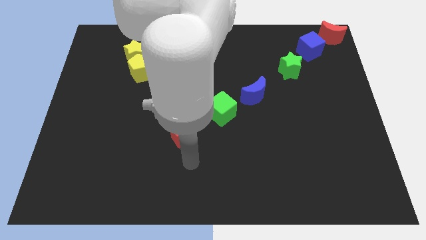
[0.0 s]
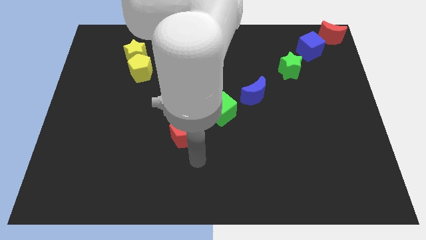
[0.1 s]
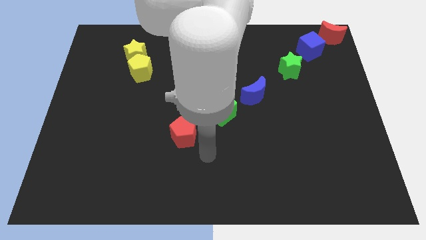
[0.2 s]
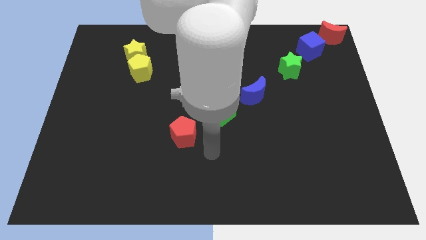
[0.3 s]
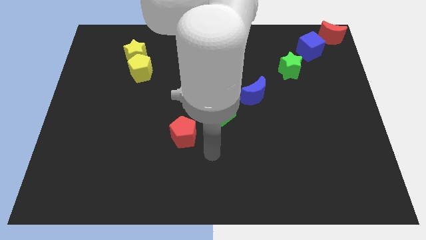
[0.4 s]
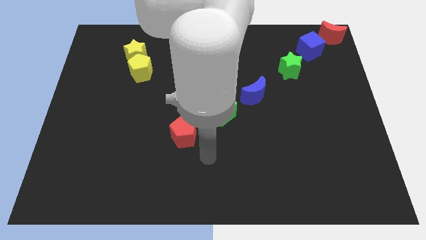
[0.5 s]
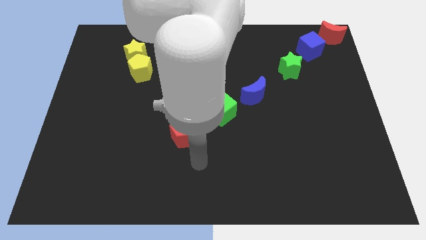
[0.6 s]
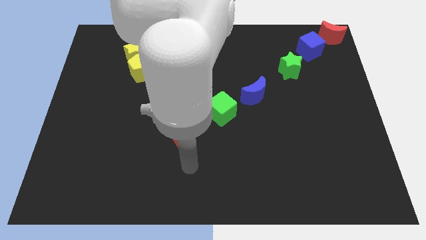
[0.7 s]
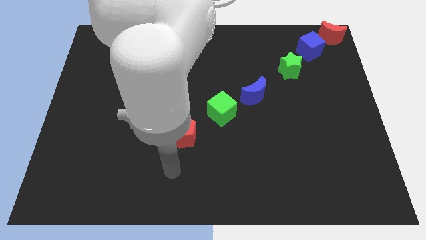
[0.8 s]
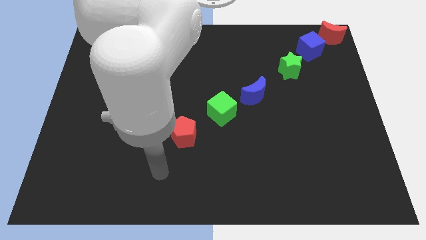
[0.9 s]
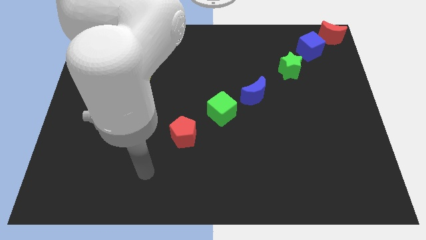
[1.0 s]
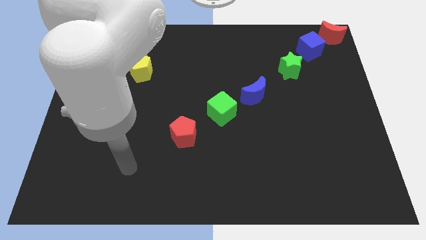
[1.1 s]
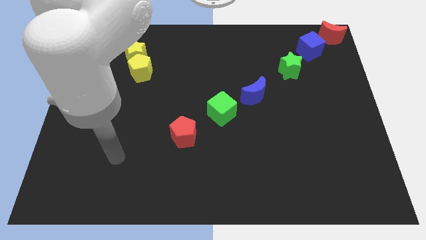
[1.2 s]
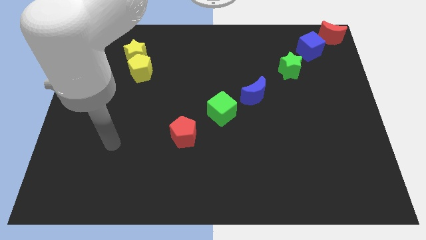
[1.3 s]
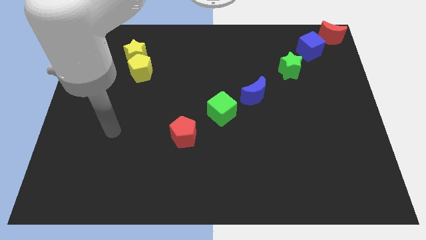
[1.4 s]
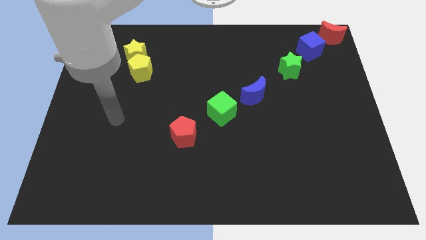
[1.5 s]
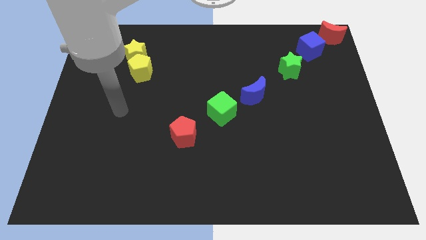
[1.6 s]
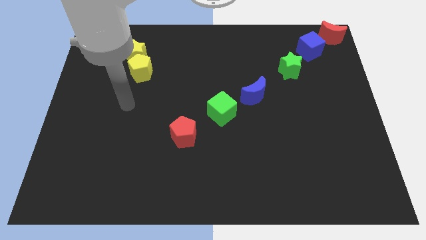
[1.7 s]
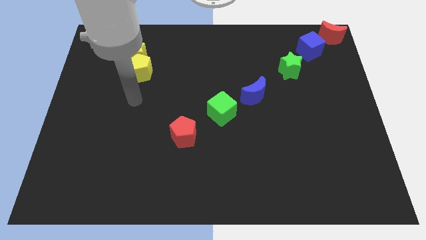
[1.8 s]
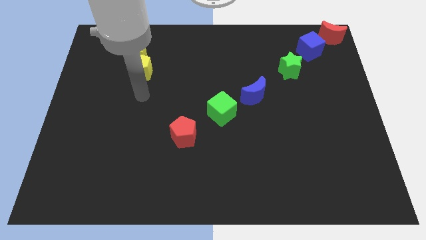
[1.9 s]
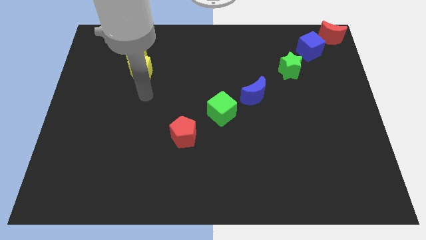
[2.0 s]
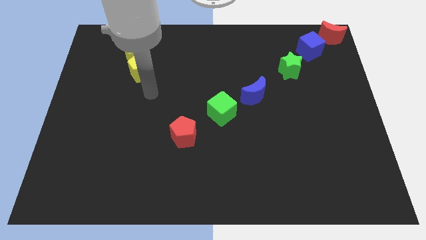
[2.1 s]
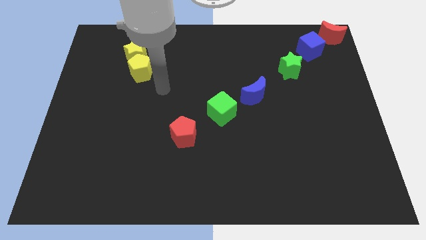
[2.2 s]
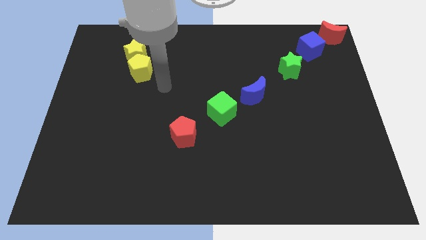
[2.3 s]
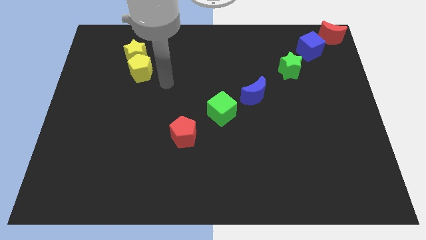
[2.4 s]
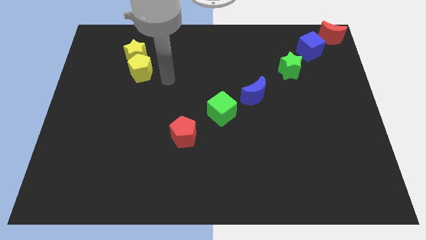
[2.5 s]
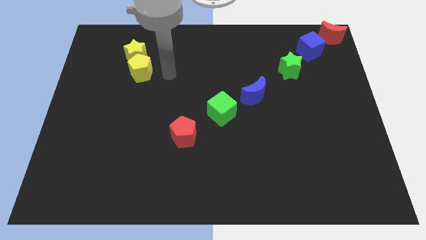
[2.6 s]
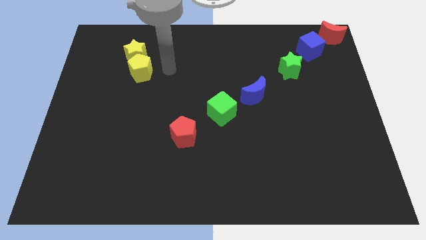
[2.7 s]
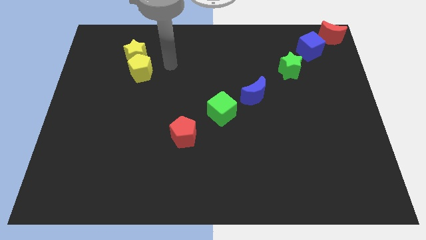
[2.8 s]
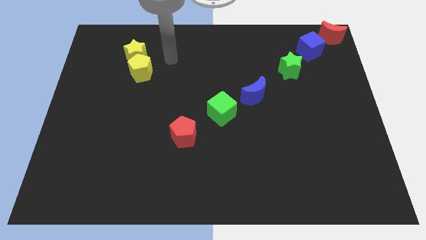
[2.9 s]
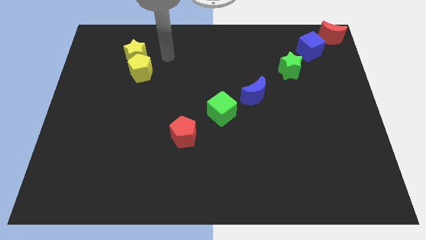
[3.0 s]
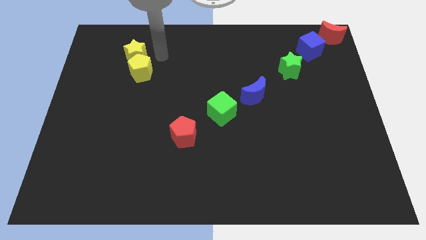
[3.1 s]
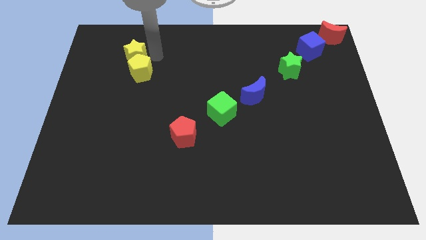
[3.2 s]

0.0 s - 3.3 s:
move the arm towards the right of the yellow star

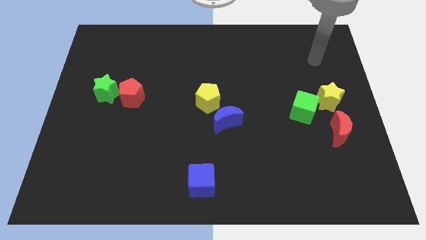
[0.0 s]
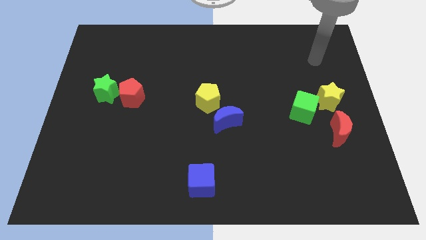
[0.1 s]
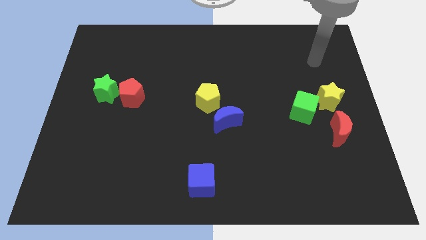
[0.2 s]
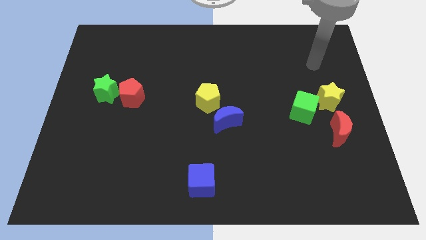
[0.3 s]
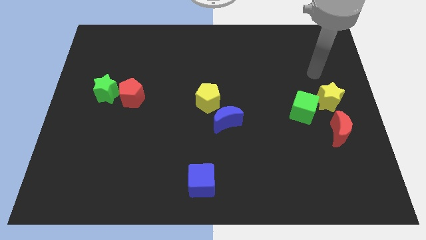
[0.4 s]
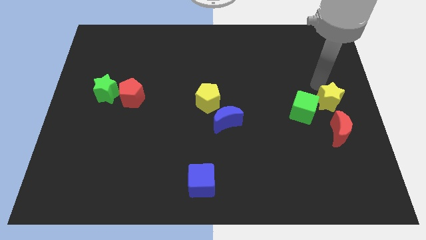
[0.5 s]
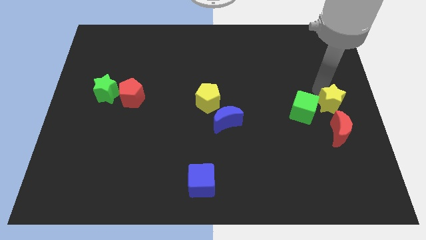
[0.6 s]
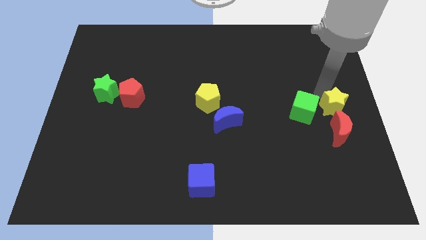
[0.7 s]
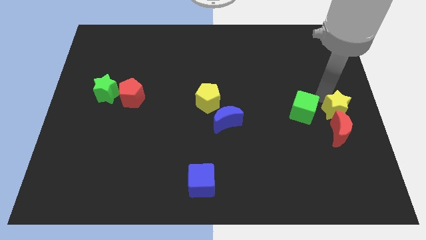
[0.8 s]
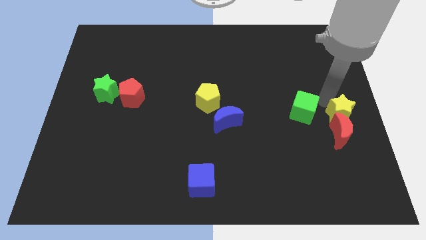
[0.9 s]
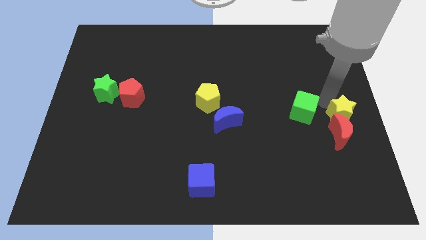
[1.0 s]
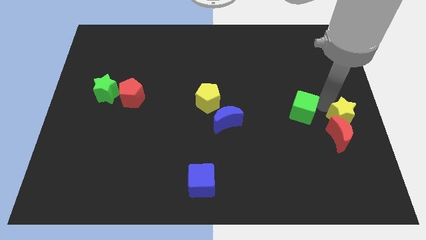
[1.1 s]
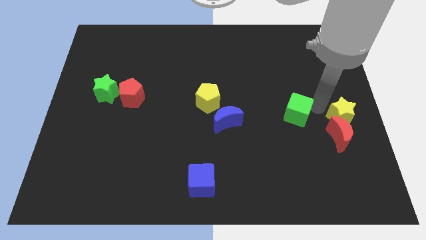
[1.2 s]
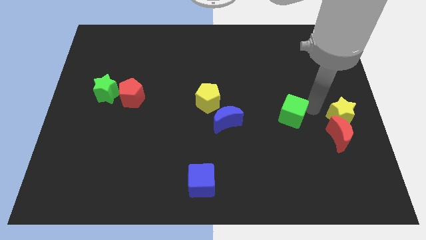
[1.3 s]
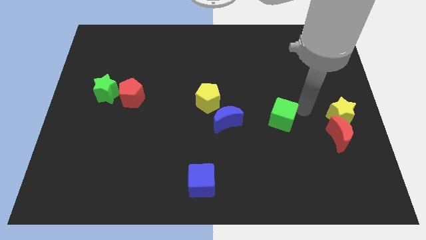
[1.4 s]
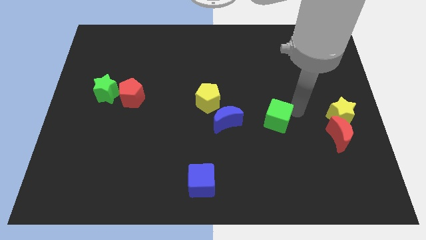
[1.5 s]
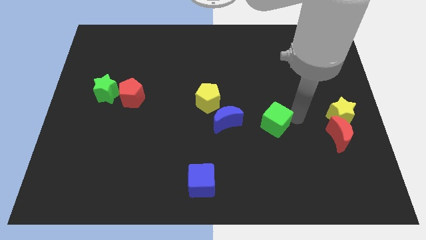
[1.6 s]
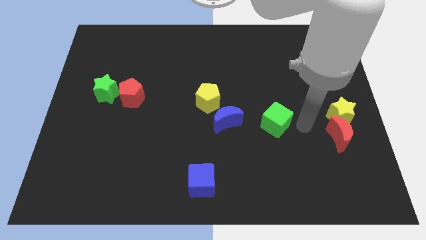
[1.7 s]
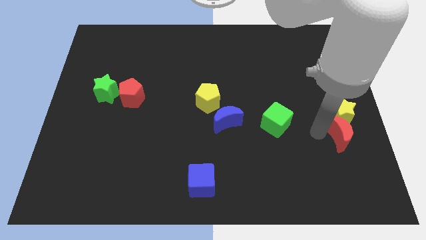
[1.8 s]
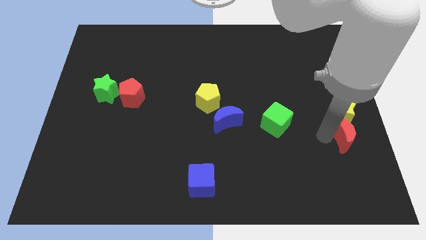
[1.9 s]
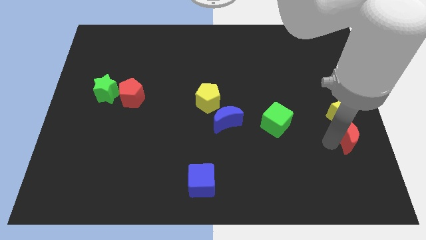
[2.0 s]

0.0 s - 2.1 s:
push the yellow star into the red moon

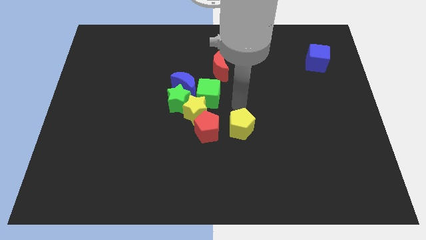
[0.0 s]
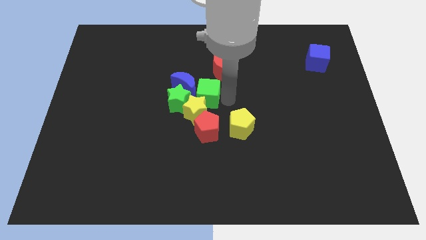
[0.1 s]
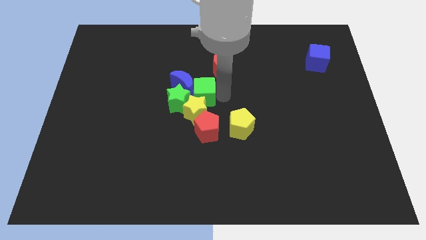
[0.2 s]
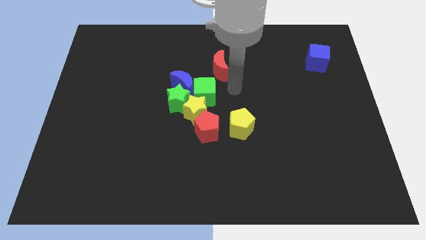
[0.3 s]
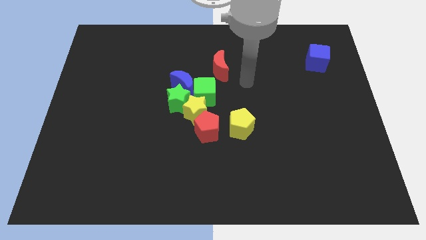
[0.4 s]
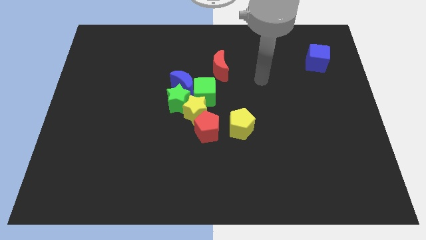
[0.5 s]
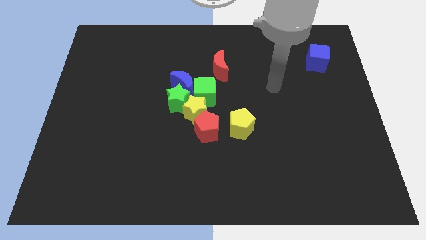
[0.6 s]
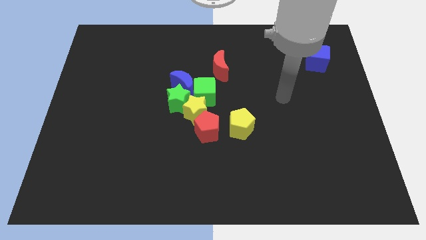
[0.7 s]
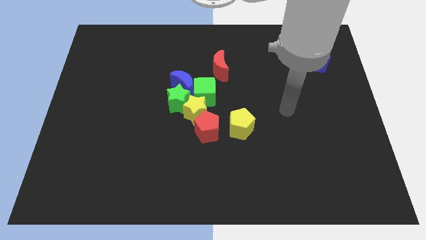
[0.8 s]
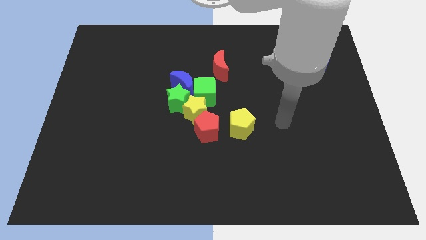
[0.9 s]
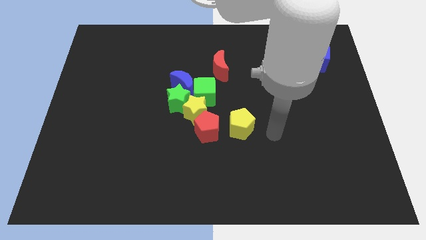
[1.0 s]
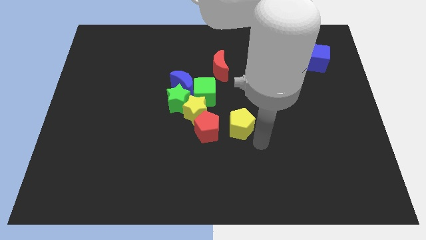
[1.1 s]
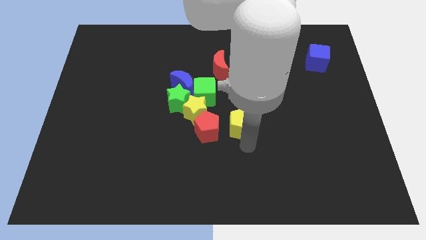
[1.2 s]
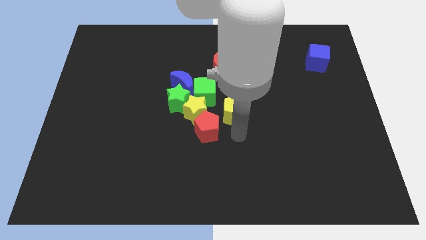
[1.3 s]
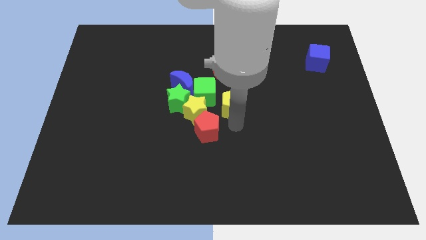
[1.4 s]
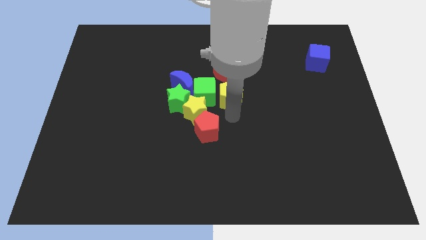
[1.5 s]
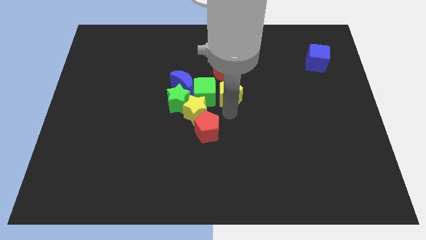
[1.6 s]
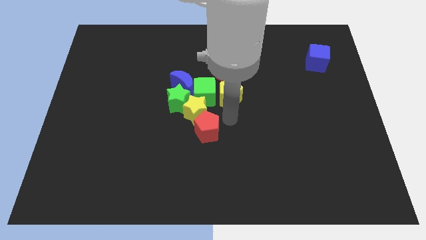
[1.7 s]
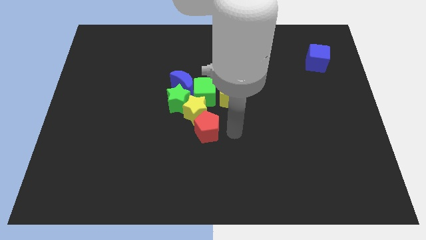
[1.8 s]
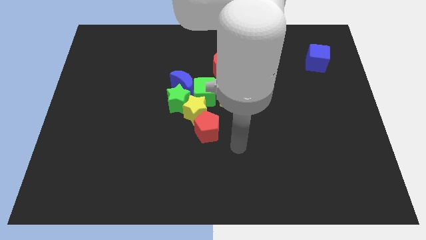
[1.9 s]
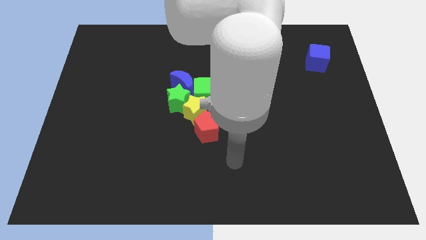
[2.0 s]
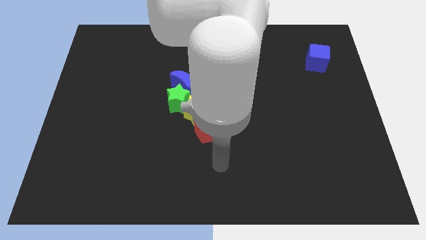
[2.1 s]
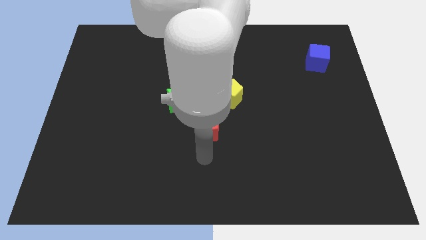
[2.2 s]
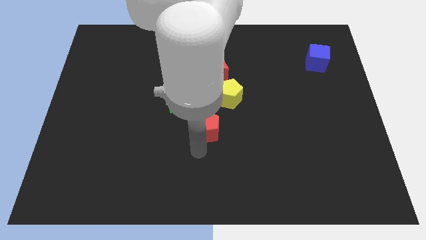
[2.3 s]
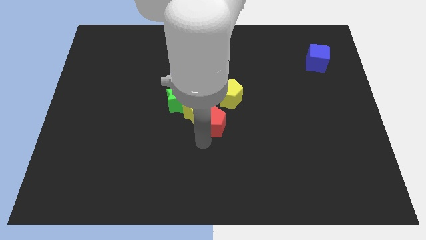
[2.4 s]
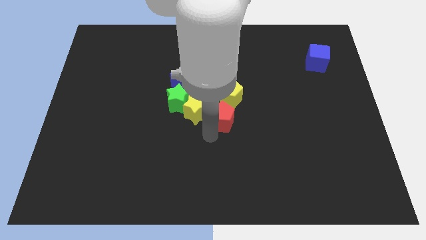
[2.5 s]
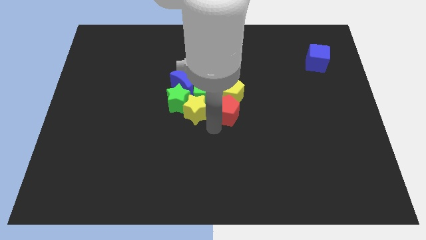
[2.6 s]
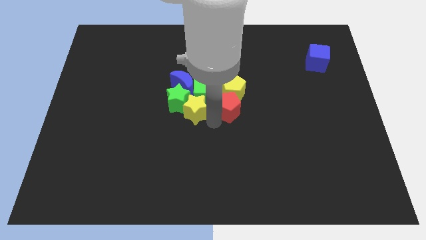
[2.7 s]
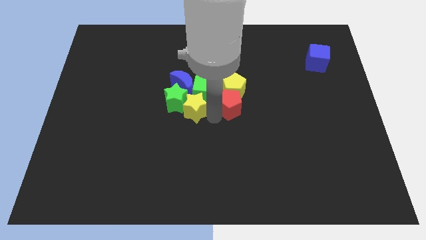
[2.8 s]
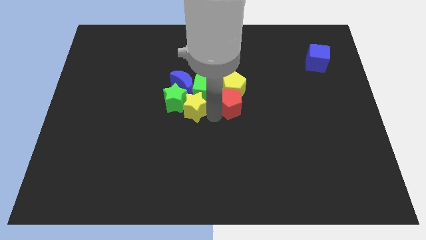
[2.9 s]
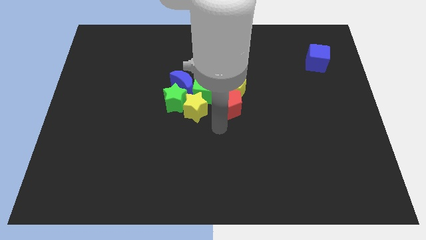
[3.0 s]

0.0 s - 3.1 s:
push the group of blocks slightly upwards

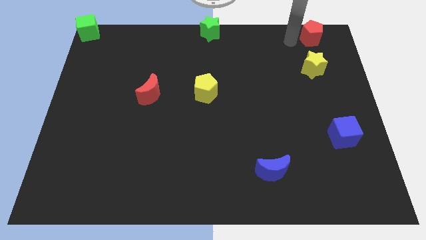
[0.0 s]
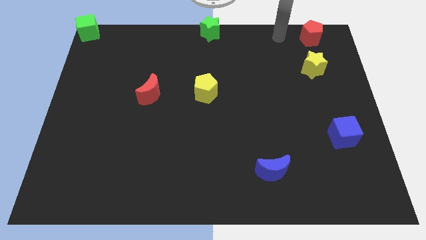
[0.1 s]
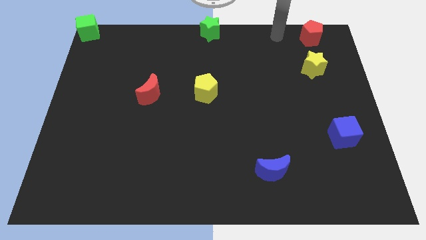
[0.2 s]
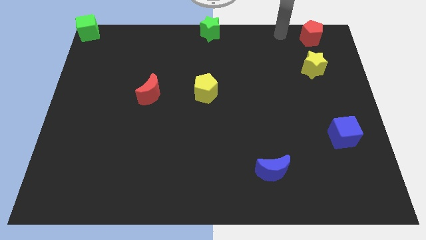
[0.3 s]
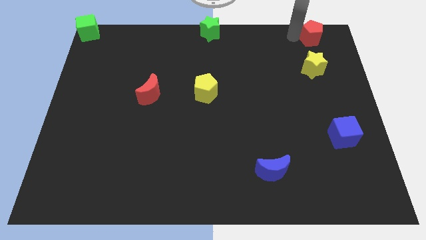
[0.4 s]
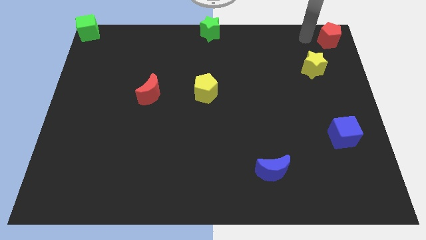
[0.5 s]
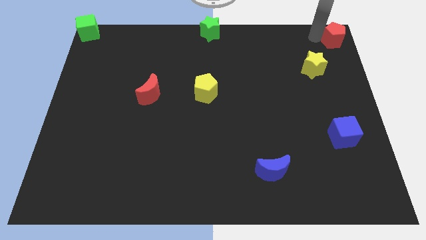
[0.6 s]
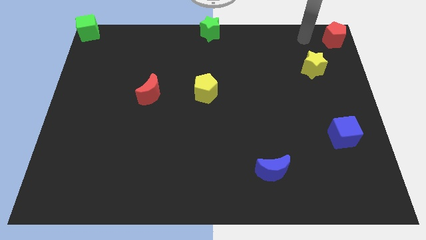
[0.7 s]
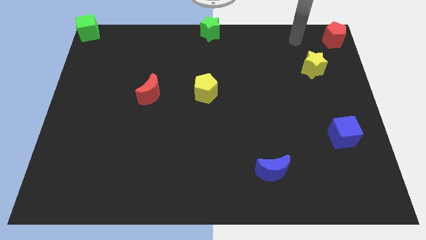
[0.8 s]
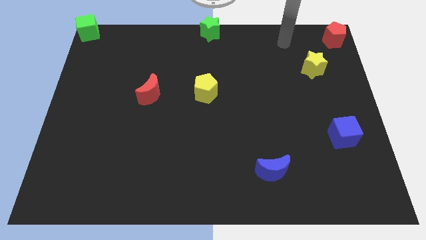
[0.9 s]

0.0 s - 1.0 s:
place red pentagon towards top right corner
